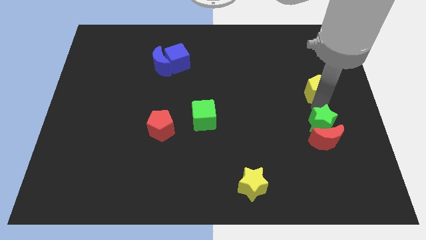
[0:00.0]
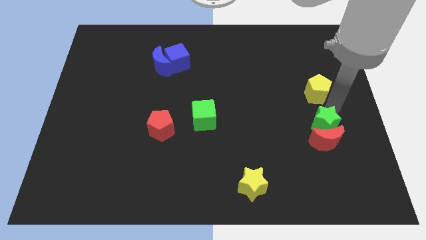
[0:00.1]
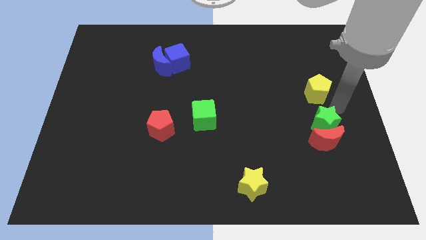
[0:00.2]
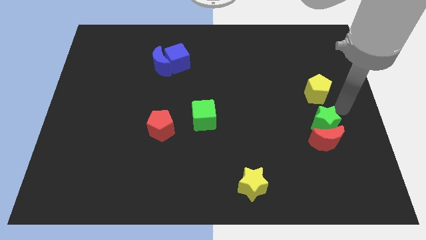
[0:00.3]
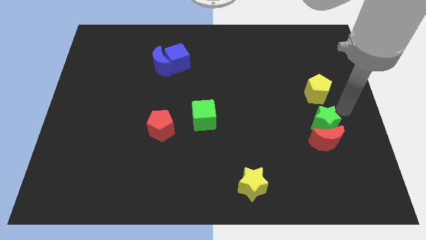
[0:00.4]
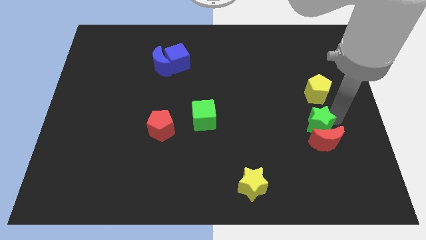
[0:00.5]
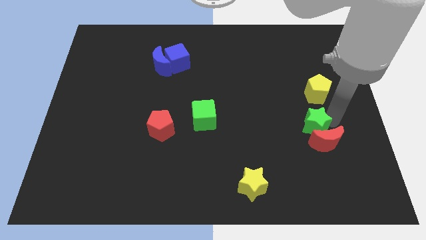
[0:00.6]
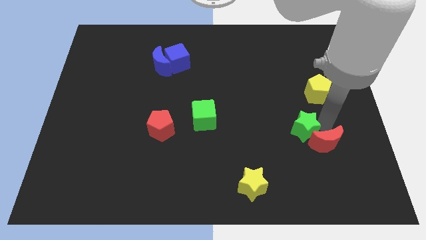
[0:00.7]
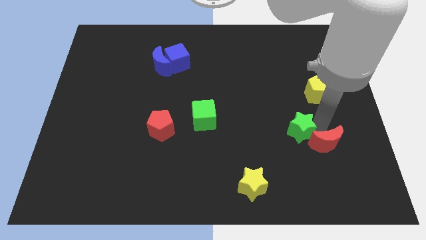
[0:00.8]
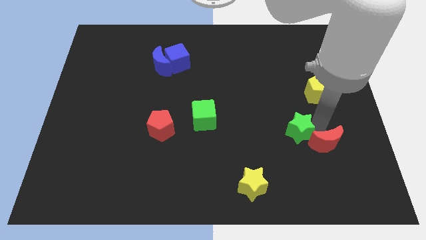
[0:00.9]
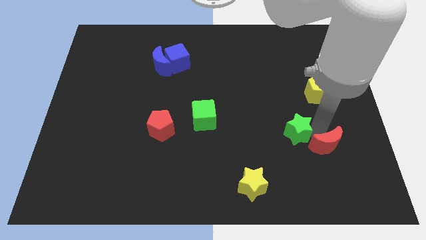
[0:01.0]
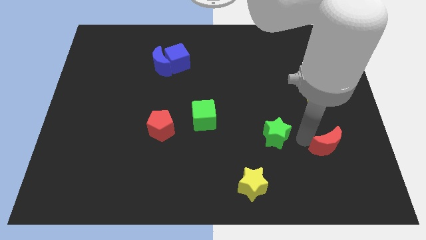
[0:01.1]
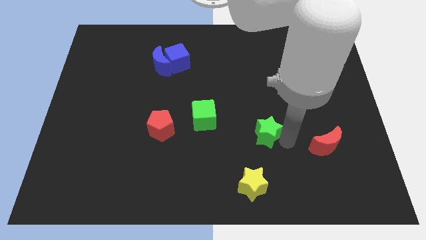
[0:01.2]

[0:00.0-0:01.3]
move green star towards the green cube

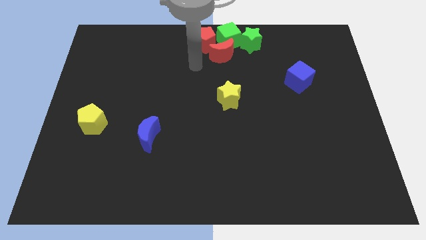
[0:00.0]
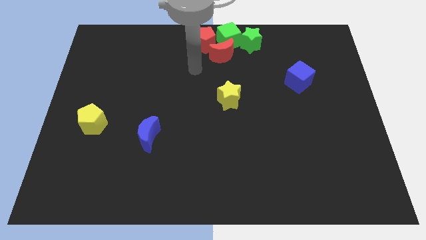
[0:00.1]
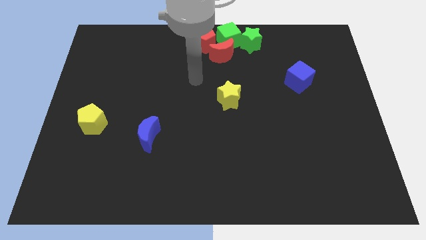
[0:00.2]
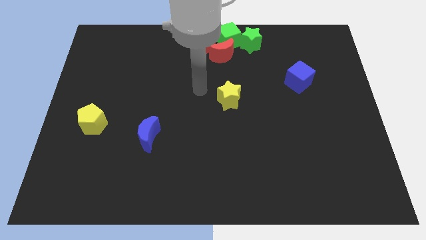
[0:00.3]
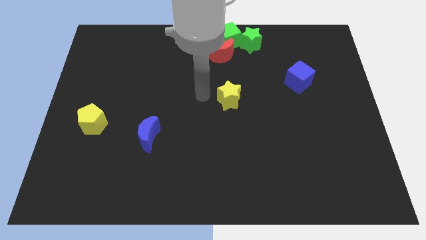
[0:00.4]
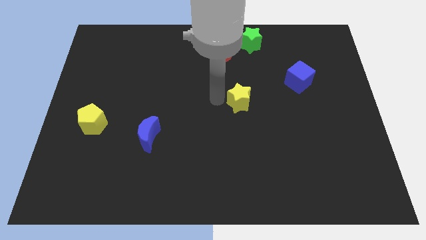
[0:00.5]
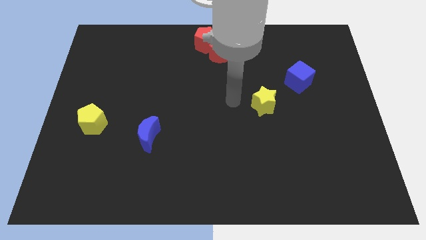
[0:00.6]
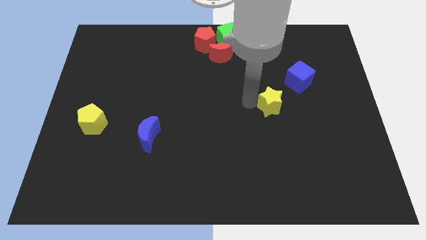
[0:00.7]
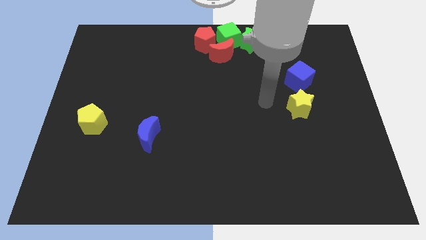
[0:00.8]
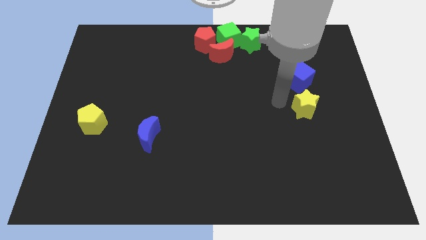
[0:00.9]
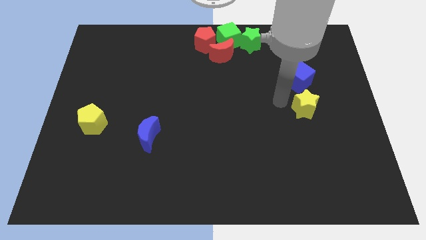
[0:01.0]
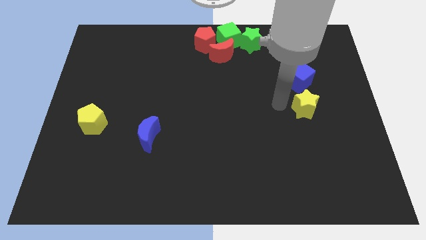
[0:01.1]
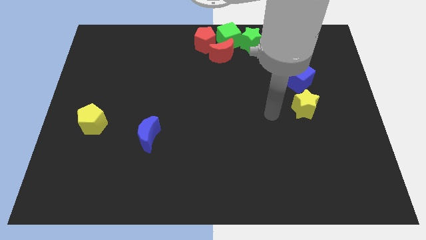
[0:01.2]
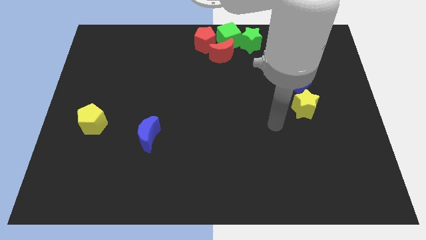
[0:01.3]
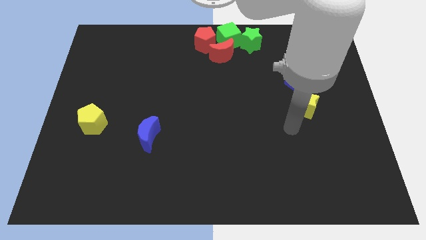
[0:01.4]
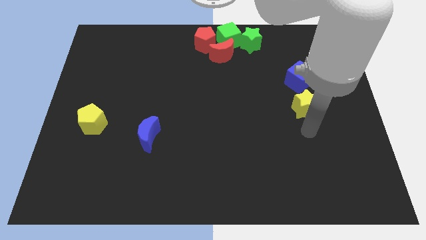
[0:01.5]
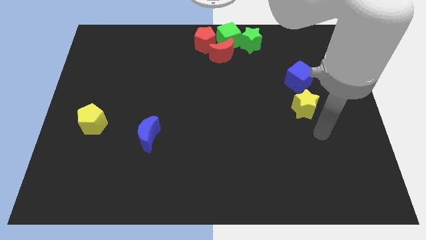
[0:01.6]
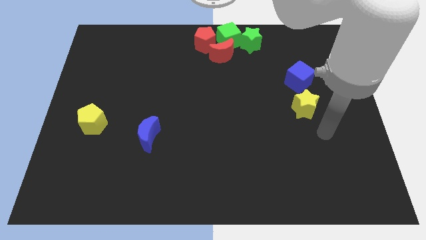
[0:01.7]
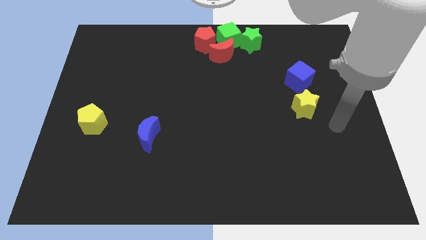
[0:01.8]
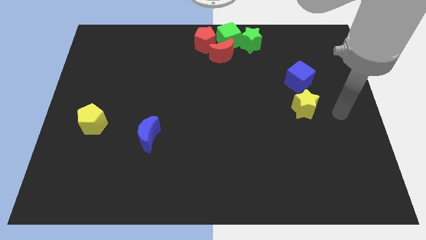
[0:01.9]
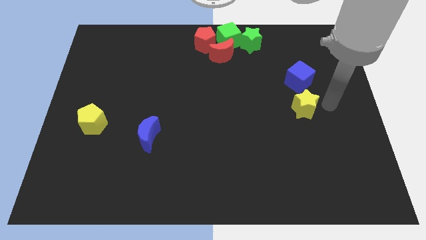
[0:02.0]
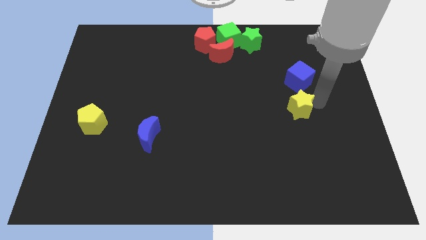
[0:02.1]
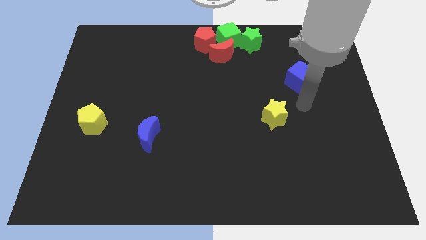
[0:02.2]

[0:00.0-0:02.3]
move the yellow star diagonally to the left side of the blue cube

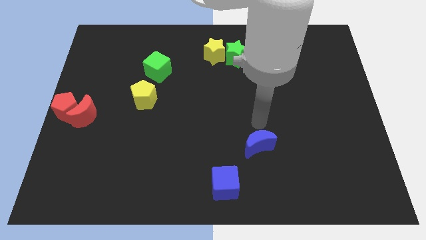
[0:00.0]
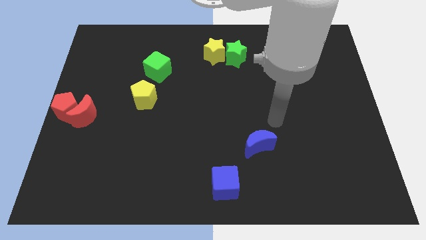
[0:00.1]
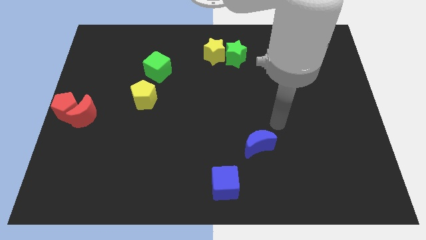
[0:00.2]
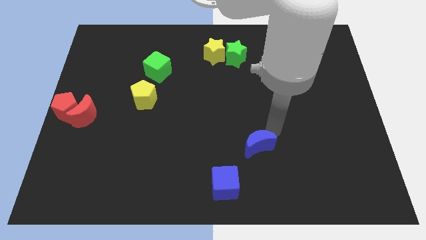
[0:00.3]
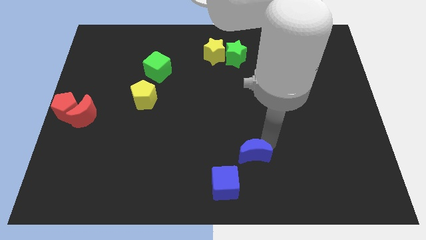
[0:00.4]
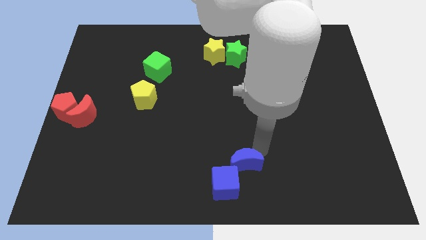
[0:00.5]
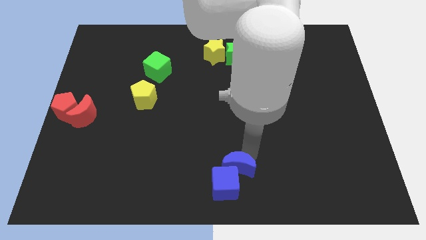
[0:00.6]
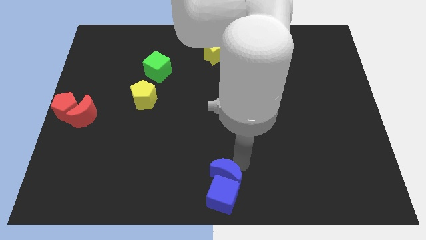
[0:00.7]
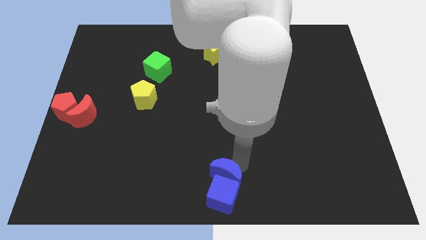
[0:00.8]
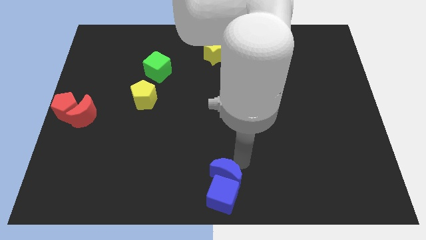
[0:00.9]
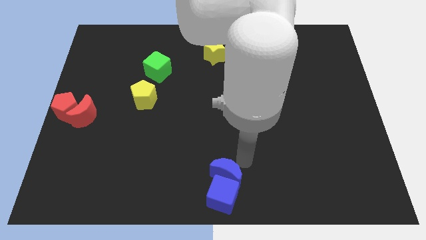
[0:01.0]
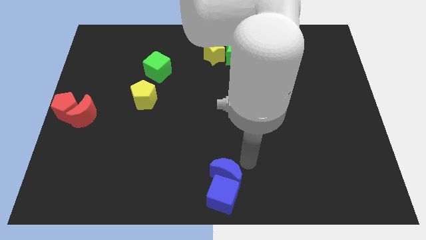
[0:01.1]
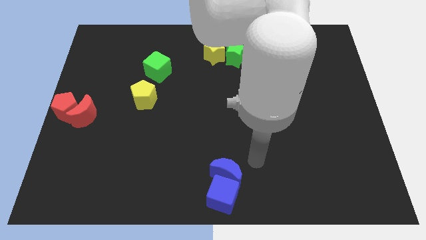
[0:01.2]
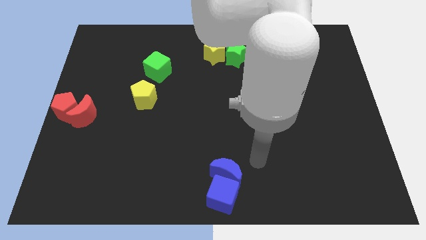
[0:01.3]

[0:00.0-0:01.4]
push the blue crescent close to the blue cube

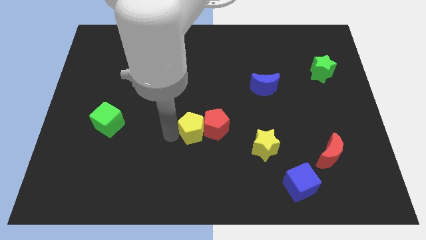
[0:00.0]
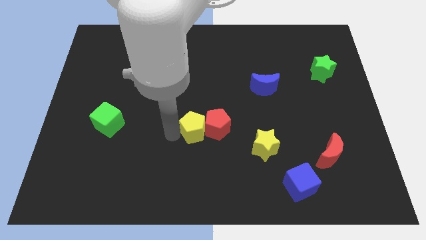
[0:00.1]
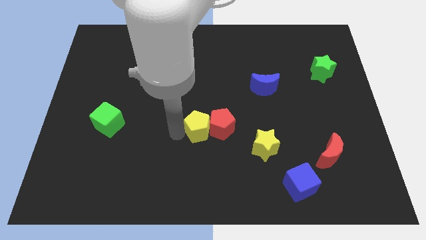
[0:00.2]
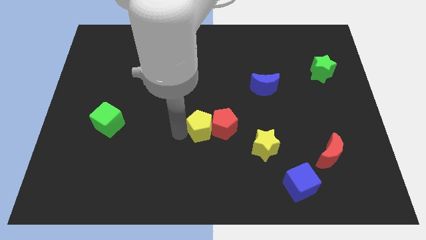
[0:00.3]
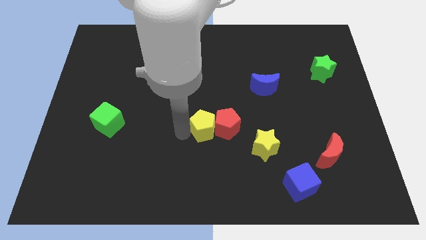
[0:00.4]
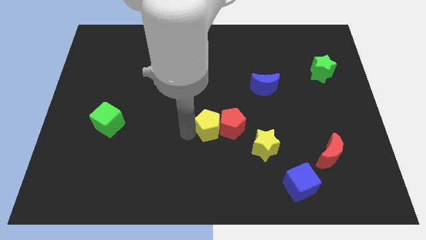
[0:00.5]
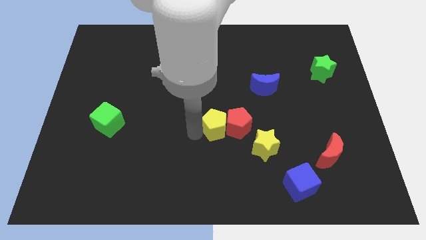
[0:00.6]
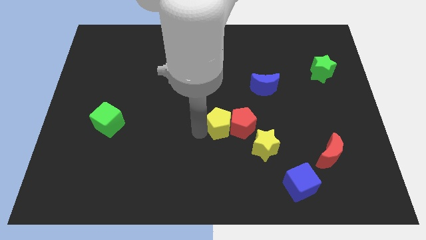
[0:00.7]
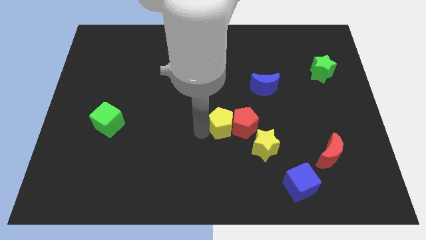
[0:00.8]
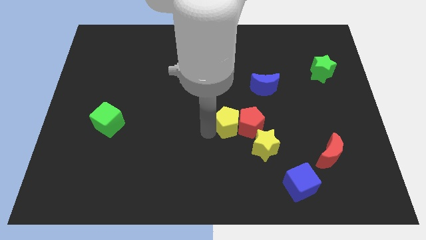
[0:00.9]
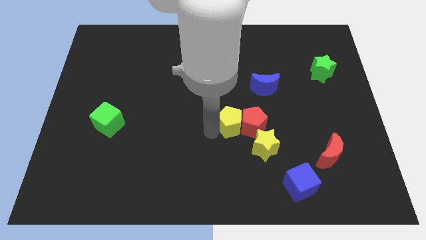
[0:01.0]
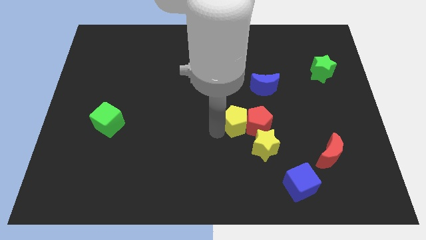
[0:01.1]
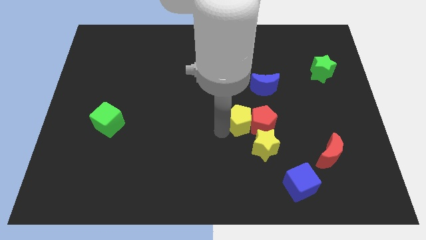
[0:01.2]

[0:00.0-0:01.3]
move red yellow pentagons above yellow star

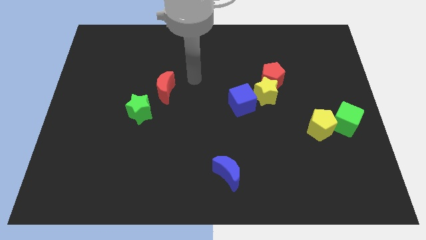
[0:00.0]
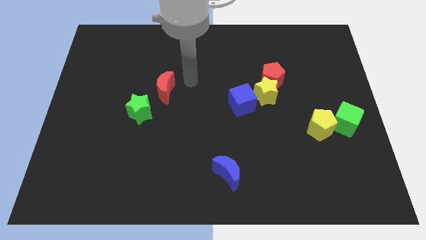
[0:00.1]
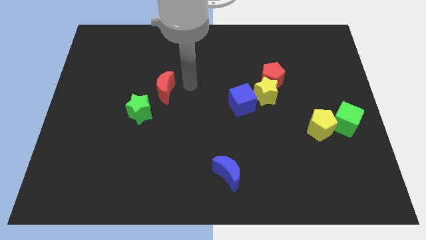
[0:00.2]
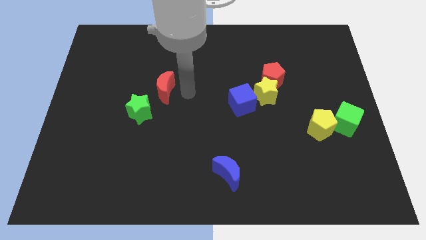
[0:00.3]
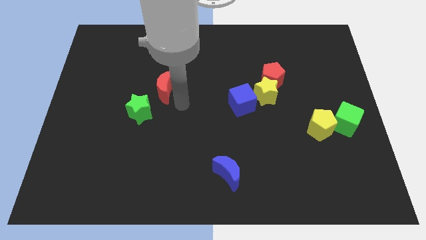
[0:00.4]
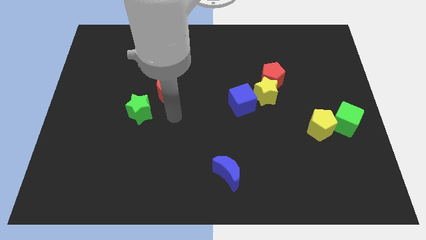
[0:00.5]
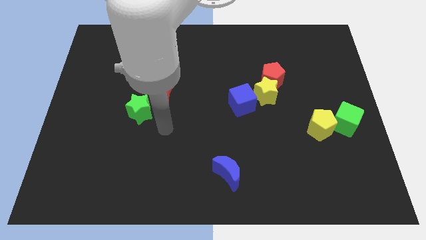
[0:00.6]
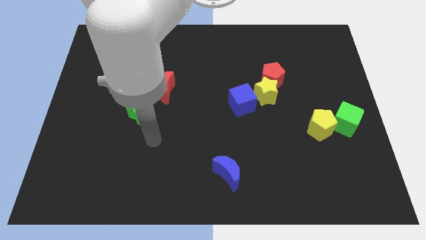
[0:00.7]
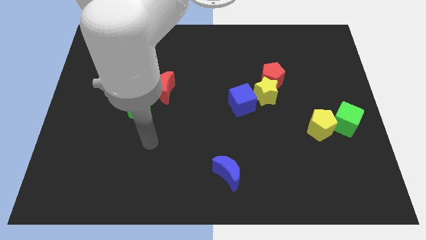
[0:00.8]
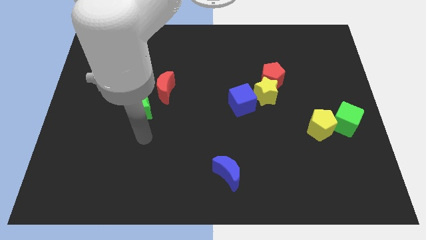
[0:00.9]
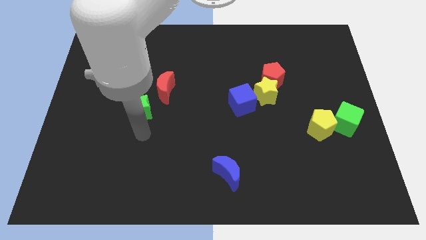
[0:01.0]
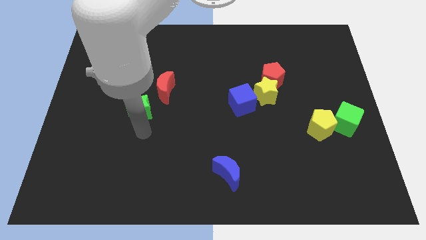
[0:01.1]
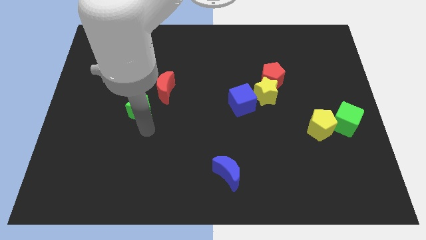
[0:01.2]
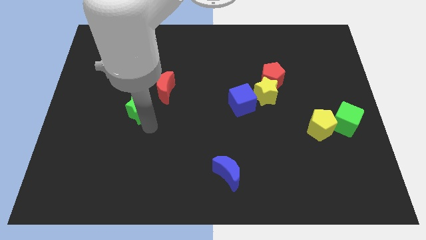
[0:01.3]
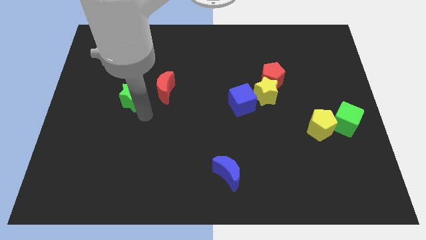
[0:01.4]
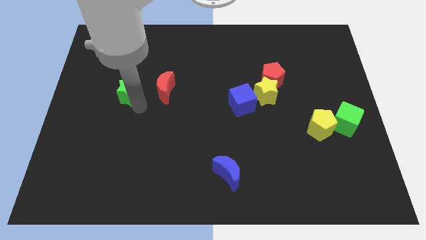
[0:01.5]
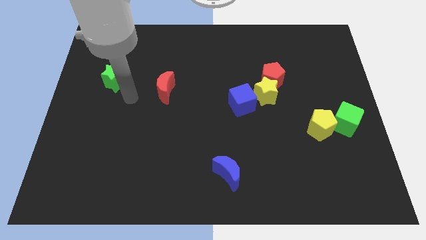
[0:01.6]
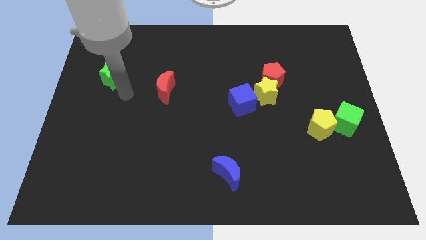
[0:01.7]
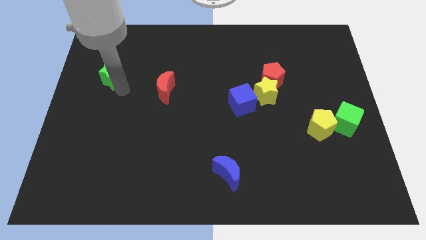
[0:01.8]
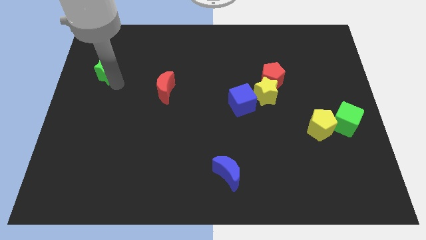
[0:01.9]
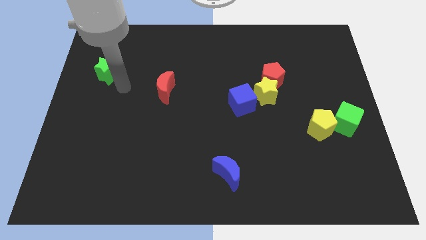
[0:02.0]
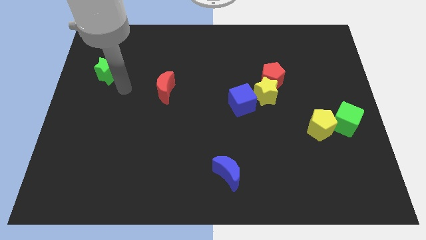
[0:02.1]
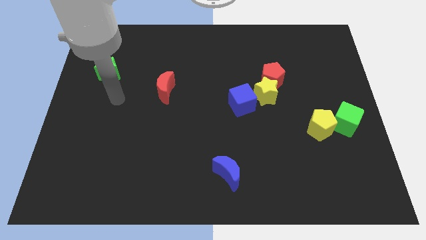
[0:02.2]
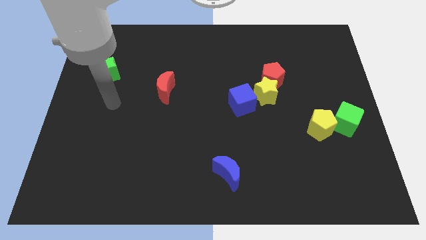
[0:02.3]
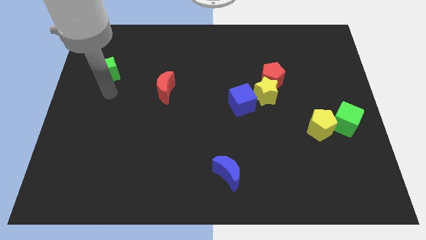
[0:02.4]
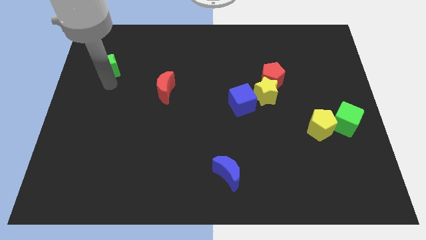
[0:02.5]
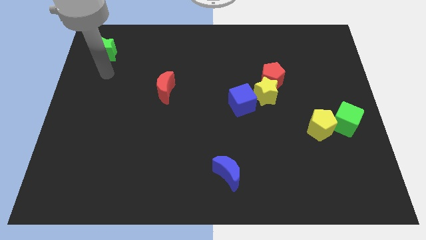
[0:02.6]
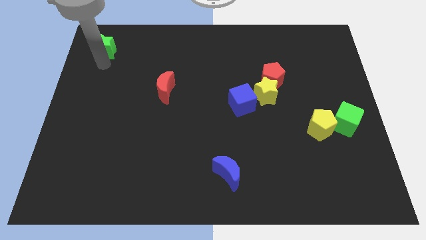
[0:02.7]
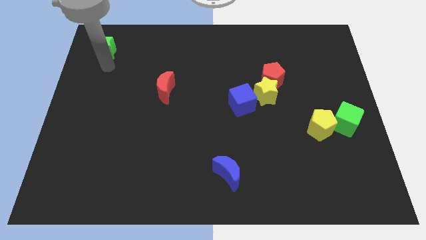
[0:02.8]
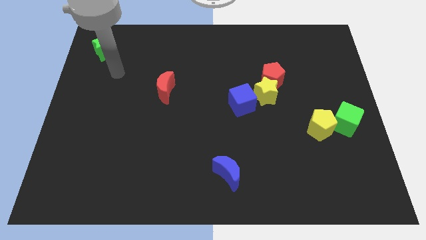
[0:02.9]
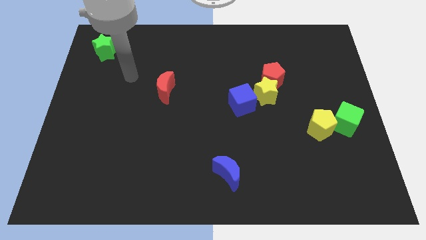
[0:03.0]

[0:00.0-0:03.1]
push the green star to the top left of the table
